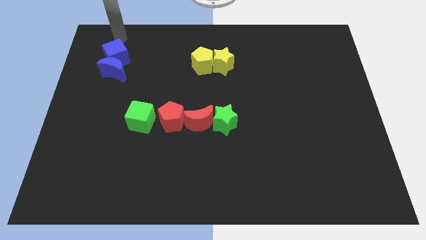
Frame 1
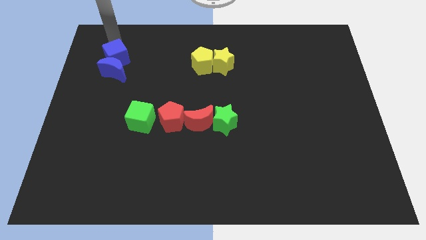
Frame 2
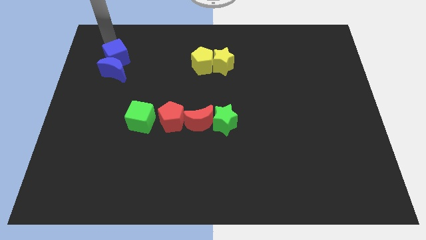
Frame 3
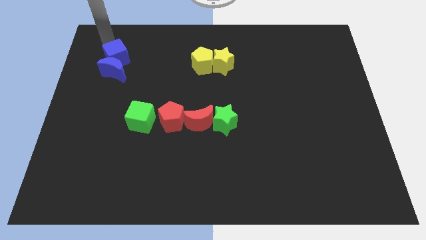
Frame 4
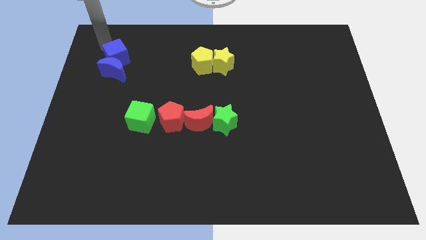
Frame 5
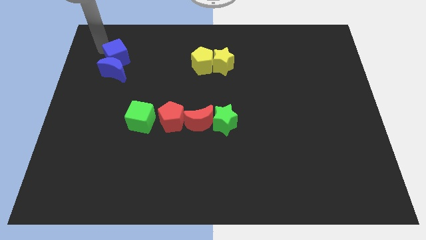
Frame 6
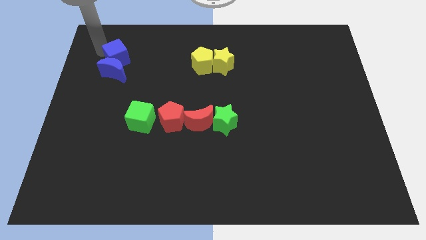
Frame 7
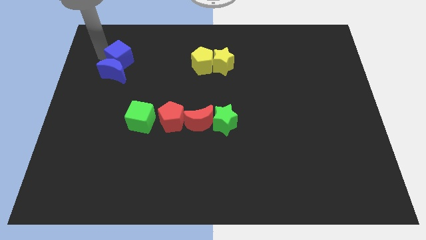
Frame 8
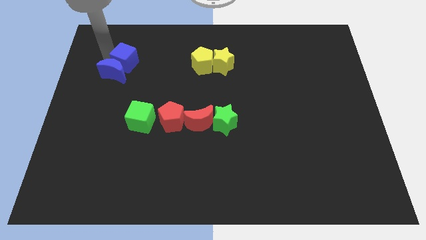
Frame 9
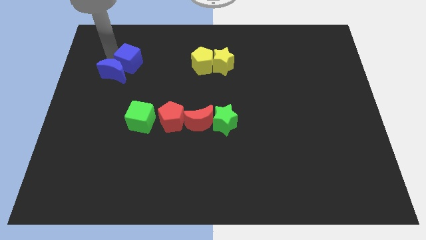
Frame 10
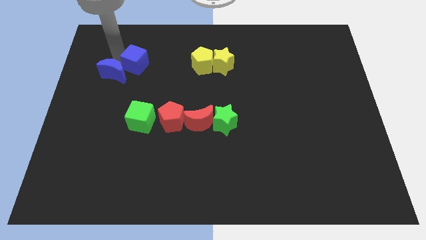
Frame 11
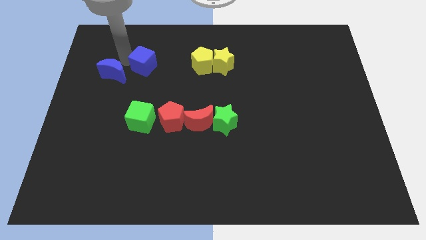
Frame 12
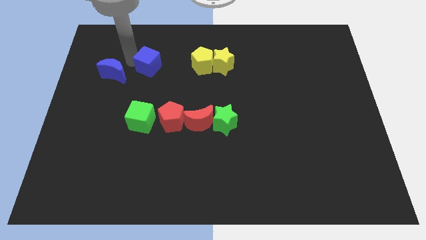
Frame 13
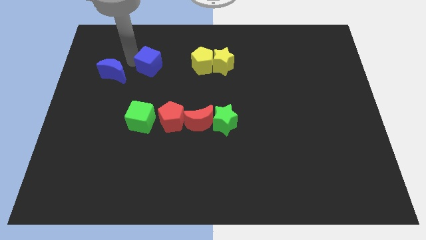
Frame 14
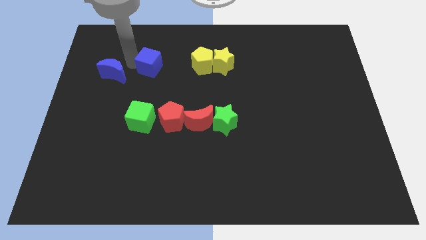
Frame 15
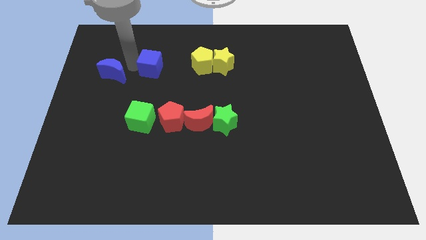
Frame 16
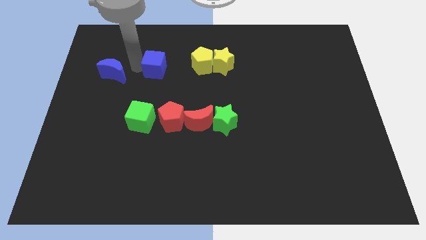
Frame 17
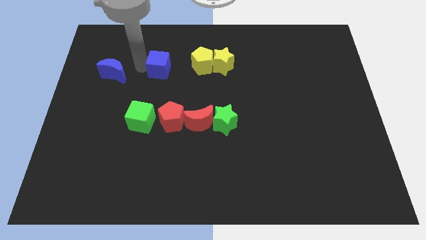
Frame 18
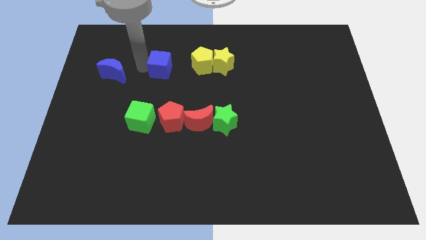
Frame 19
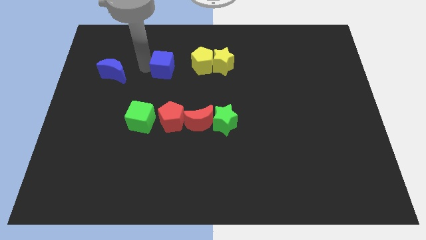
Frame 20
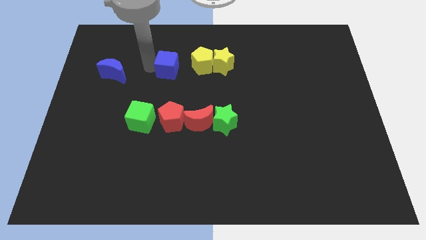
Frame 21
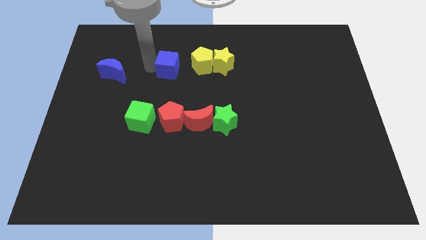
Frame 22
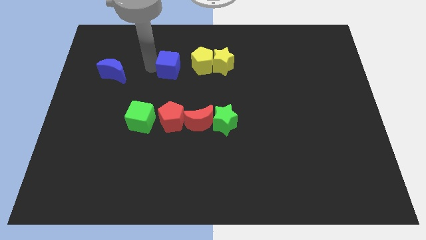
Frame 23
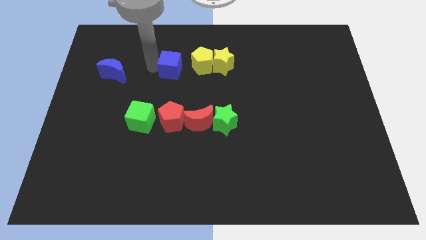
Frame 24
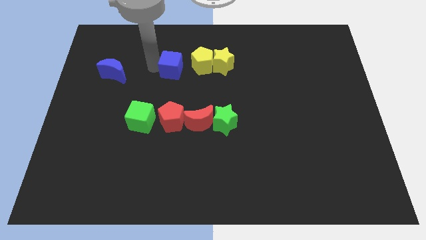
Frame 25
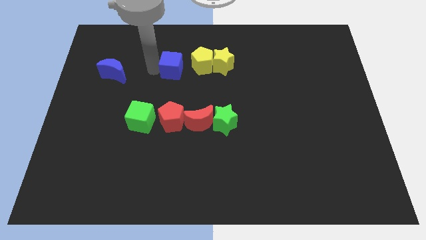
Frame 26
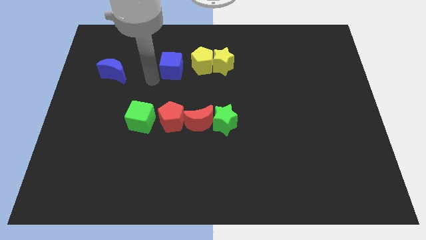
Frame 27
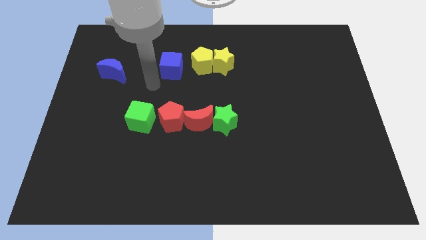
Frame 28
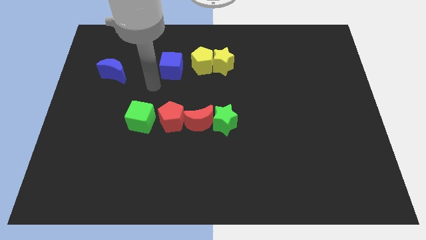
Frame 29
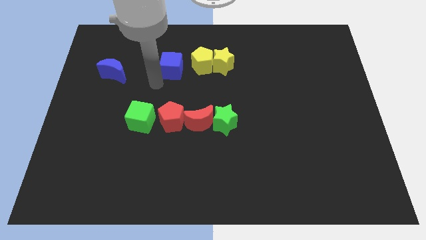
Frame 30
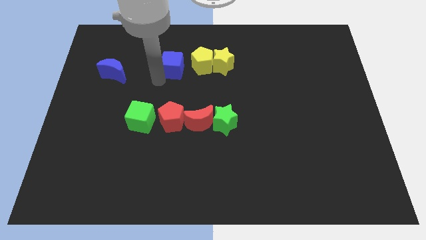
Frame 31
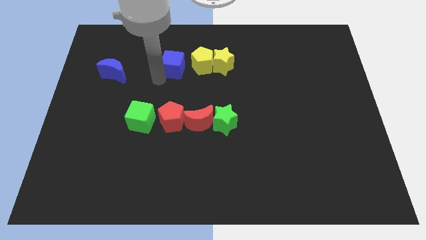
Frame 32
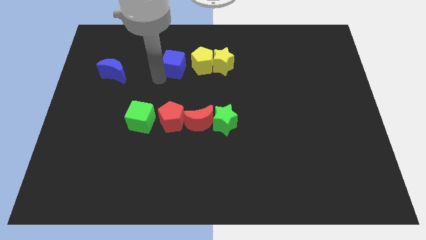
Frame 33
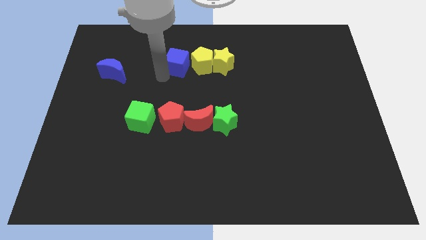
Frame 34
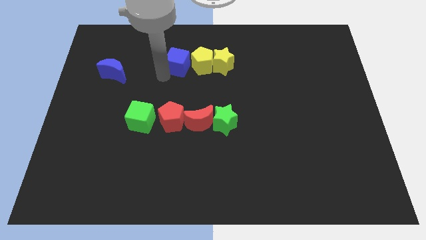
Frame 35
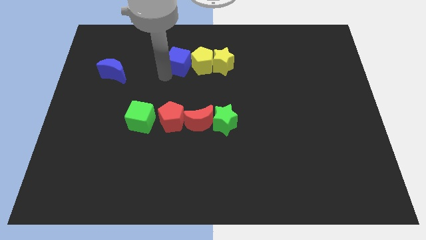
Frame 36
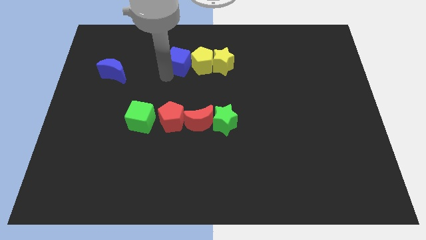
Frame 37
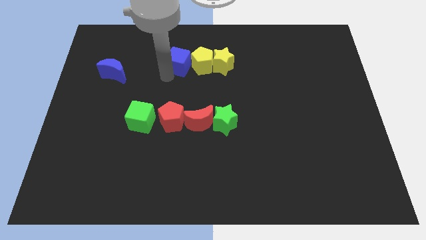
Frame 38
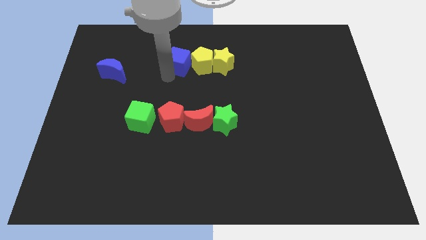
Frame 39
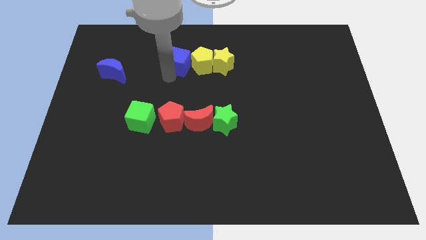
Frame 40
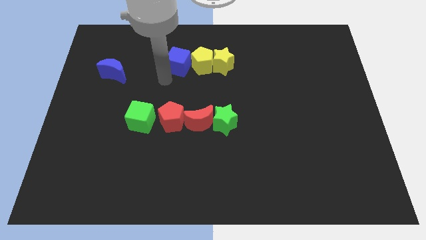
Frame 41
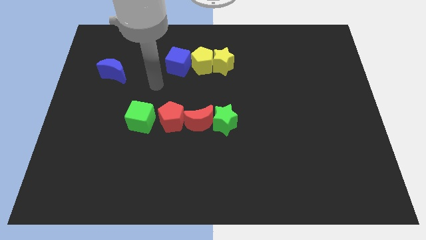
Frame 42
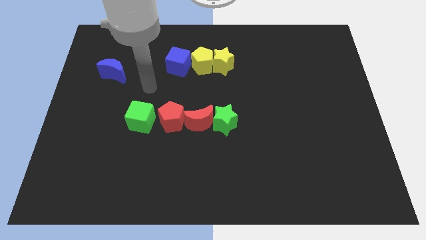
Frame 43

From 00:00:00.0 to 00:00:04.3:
push the blue cube to the left side of the yellow pentagon

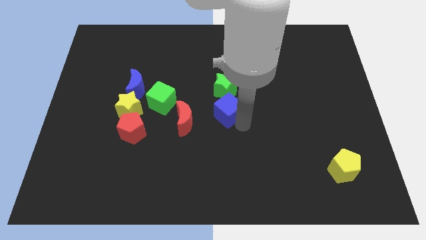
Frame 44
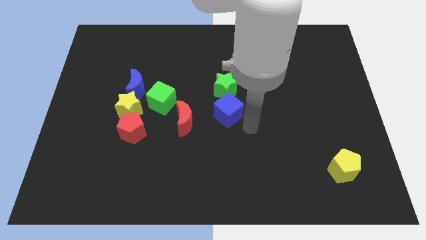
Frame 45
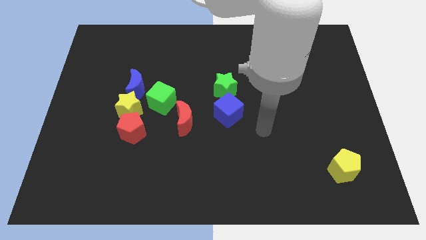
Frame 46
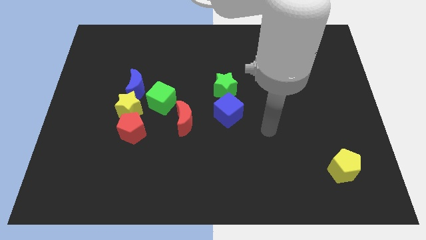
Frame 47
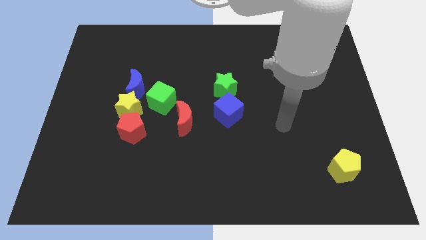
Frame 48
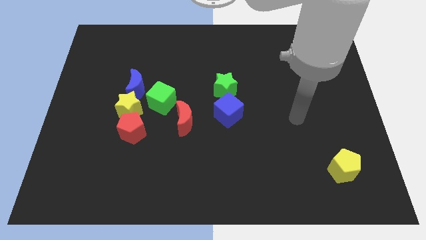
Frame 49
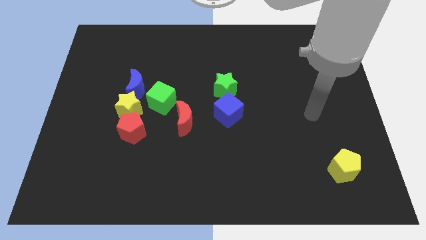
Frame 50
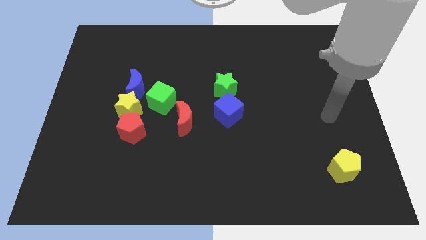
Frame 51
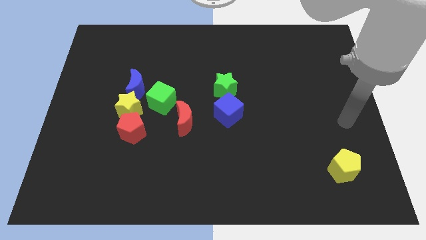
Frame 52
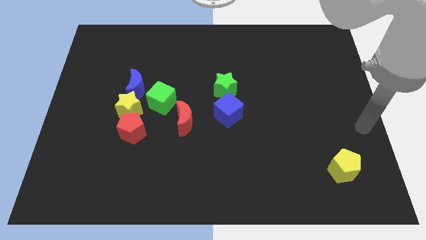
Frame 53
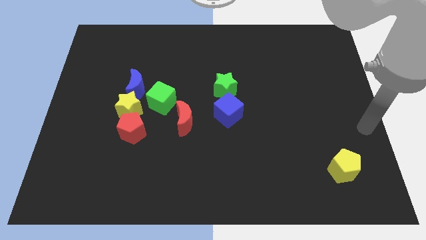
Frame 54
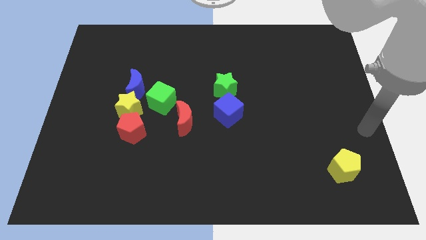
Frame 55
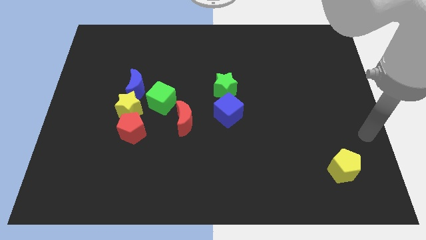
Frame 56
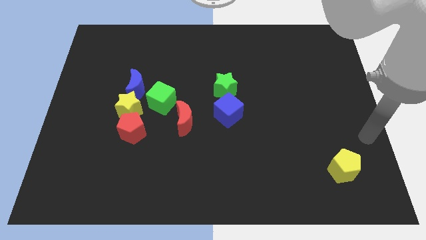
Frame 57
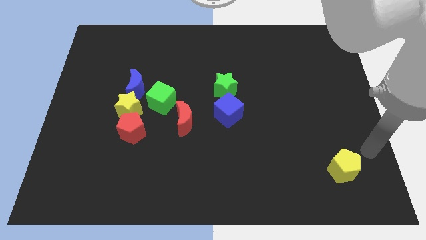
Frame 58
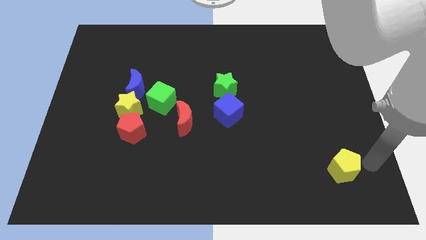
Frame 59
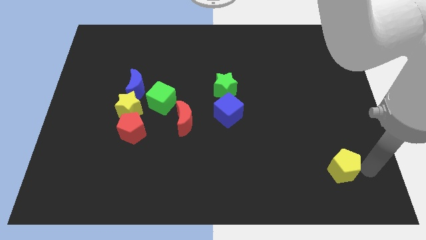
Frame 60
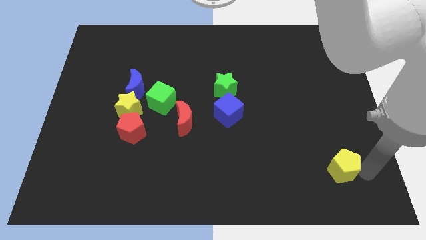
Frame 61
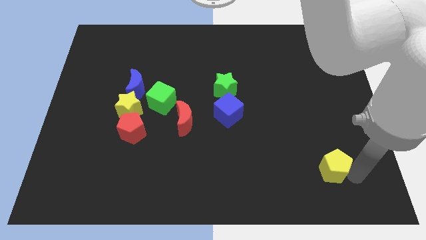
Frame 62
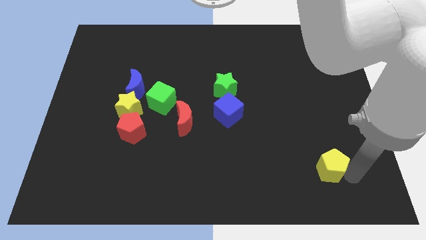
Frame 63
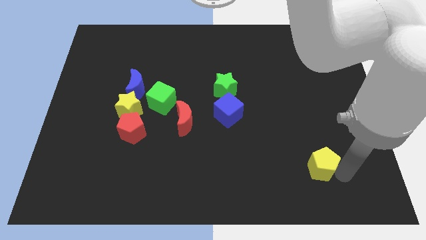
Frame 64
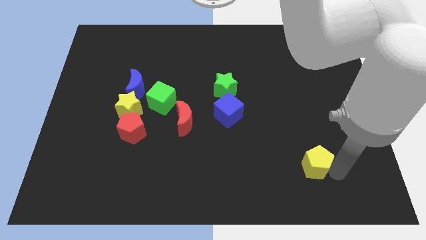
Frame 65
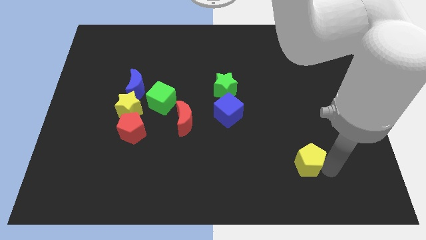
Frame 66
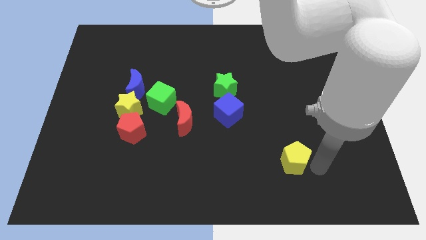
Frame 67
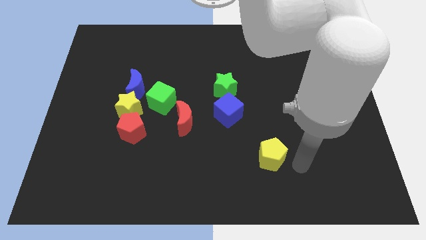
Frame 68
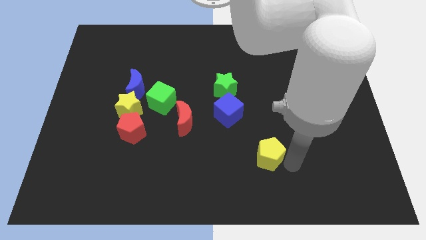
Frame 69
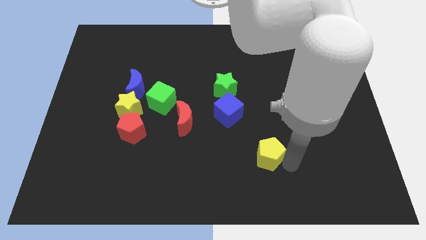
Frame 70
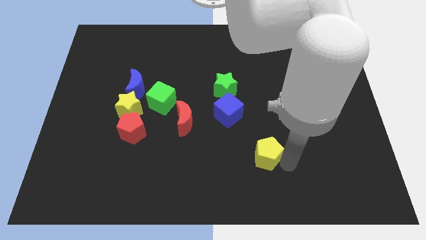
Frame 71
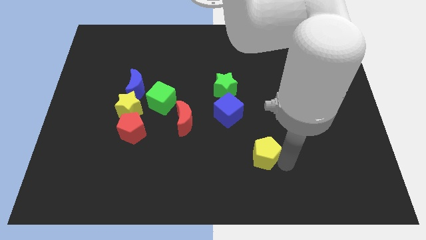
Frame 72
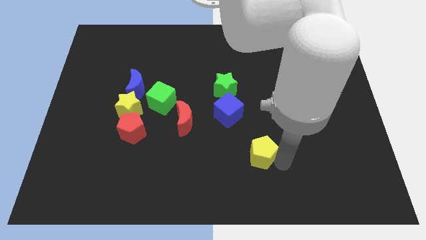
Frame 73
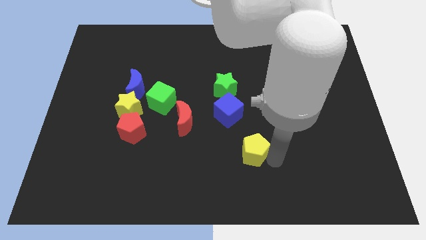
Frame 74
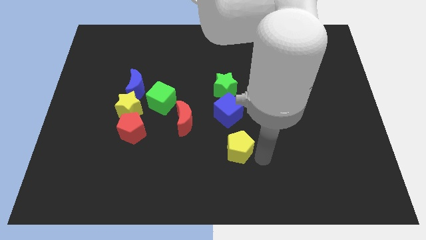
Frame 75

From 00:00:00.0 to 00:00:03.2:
move the yellow pentagon below the blue cube

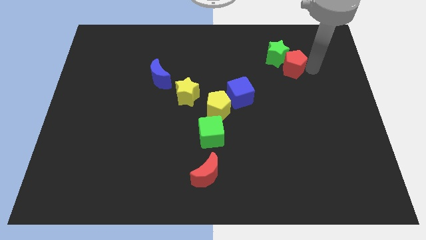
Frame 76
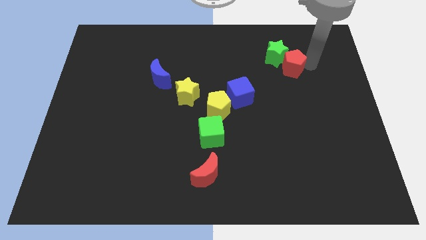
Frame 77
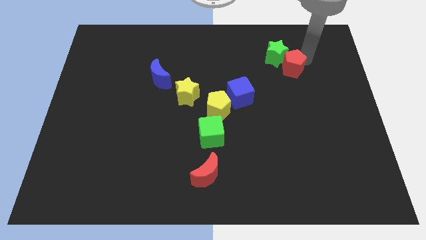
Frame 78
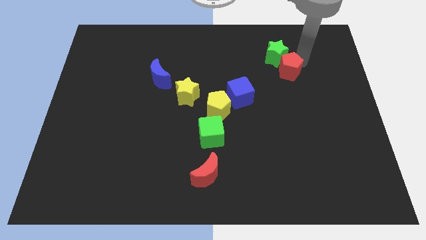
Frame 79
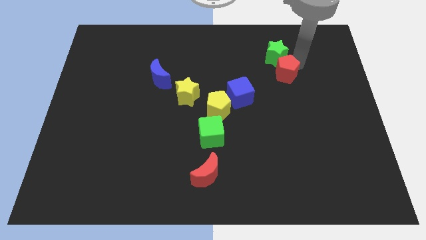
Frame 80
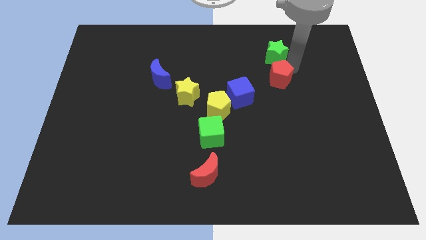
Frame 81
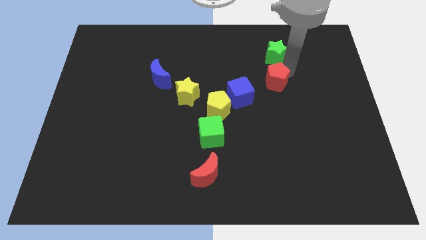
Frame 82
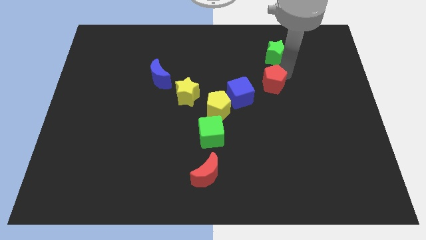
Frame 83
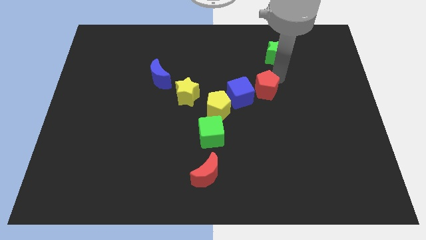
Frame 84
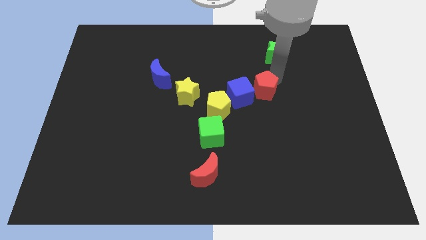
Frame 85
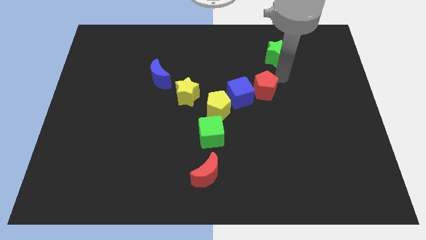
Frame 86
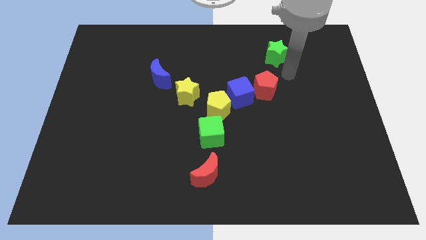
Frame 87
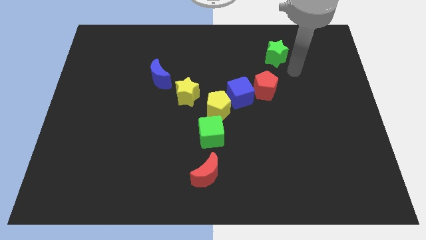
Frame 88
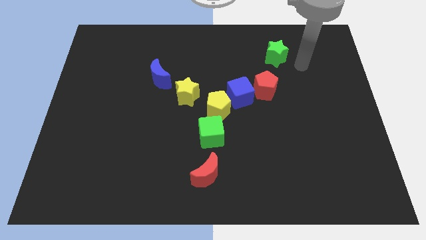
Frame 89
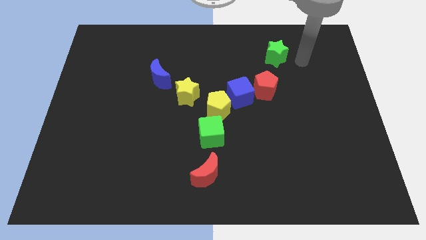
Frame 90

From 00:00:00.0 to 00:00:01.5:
separate the red pentagon and green star
